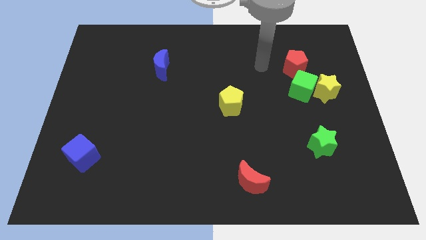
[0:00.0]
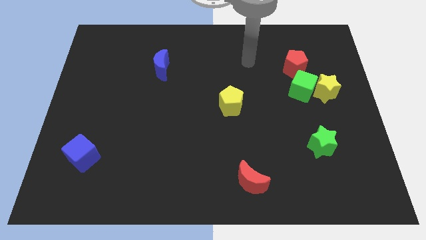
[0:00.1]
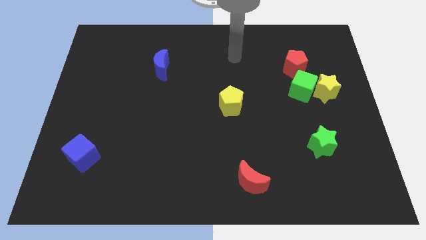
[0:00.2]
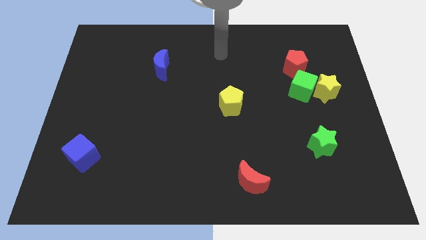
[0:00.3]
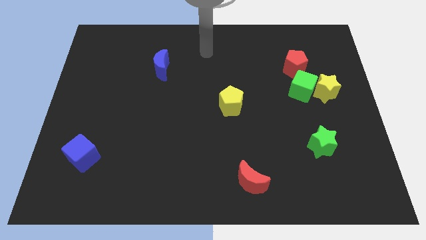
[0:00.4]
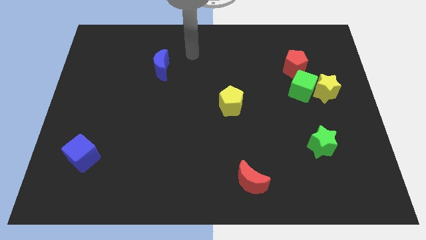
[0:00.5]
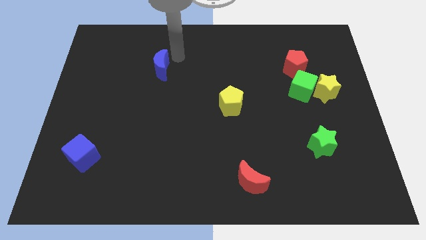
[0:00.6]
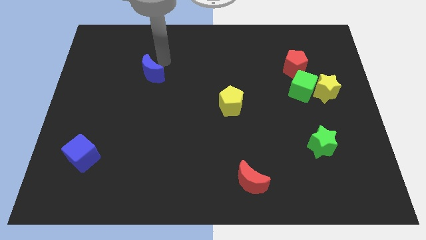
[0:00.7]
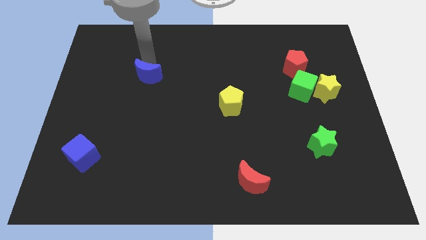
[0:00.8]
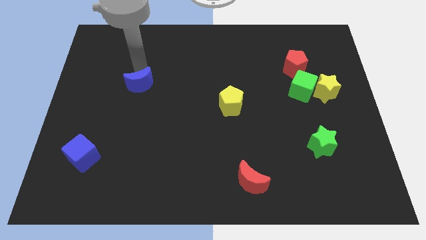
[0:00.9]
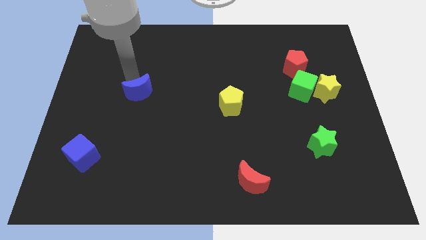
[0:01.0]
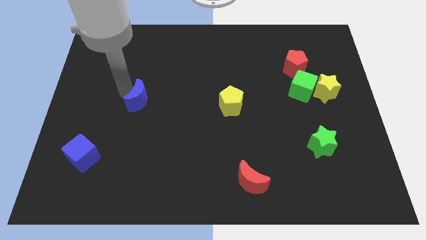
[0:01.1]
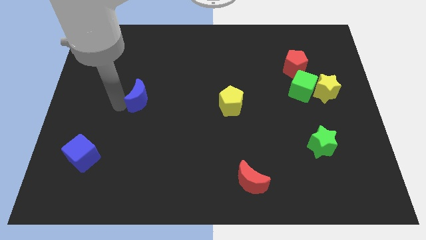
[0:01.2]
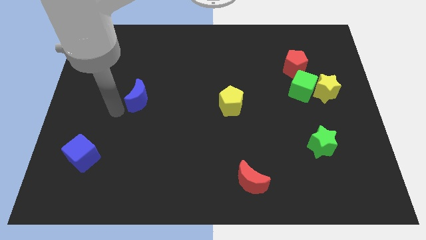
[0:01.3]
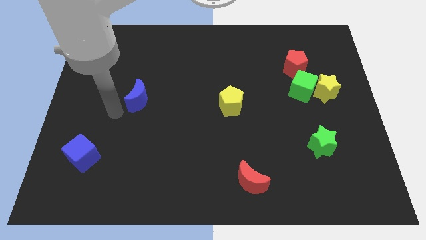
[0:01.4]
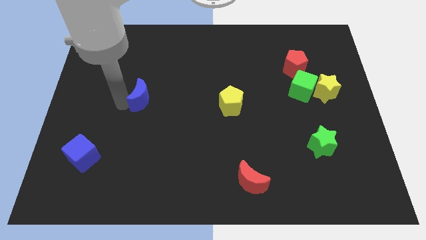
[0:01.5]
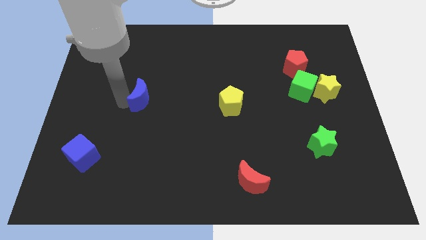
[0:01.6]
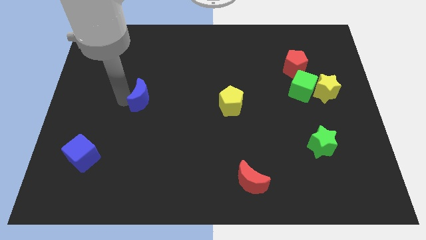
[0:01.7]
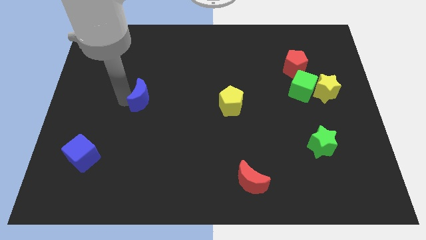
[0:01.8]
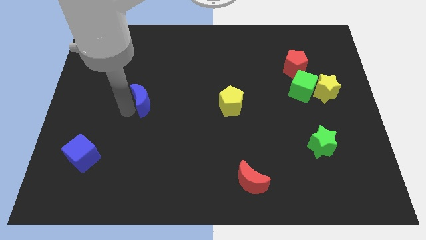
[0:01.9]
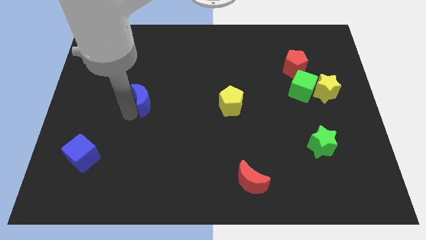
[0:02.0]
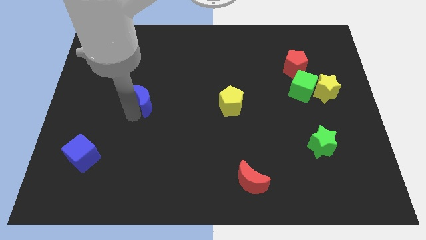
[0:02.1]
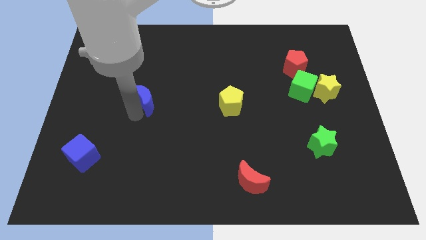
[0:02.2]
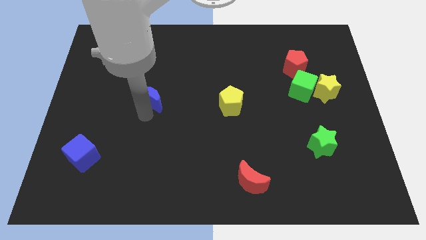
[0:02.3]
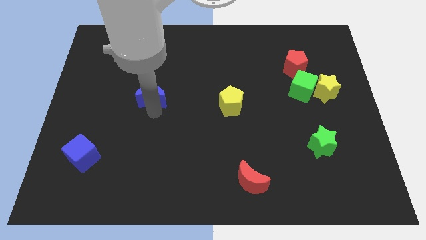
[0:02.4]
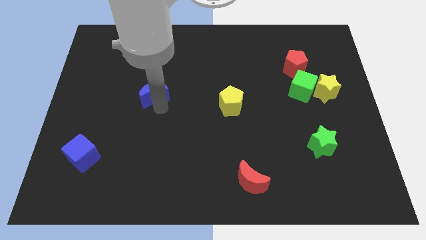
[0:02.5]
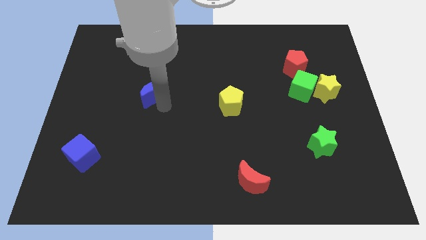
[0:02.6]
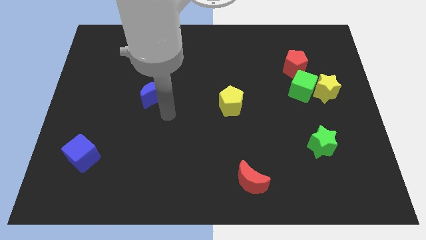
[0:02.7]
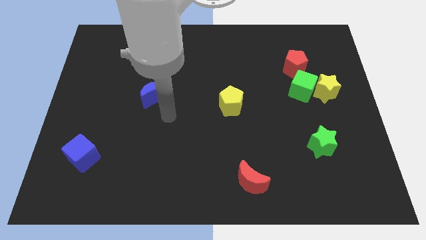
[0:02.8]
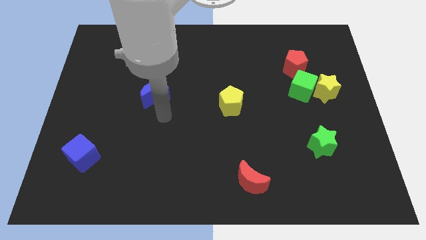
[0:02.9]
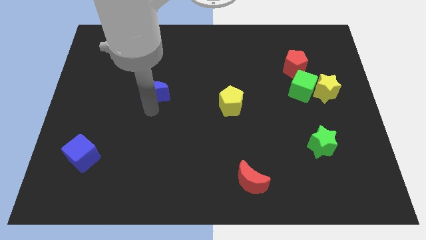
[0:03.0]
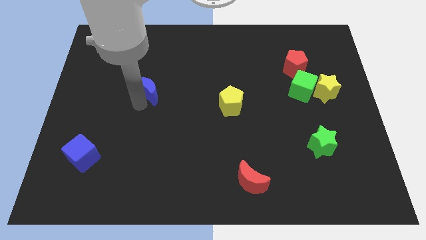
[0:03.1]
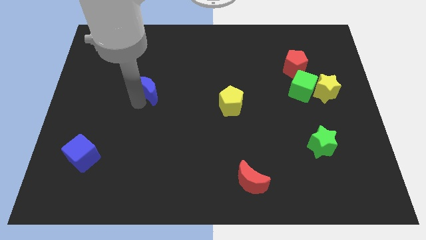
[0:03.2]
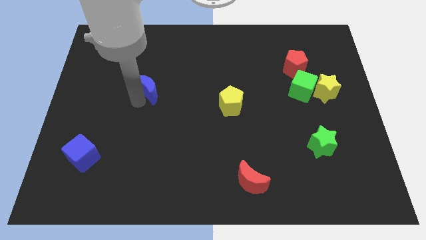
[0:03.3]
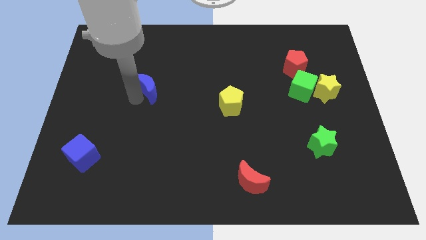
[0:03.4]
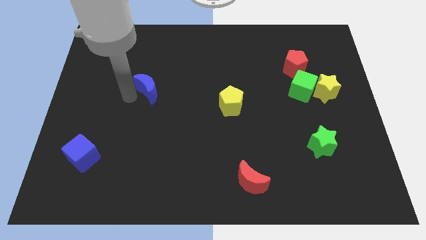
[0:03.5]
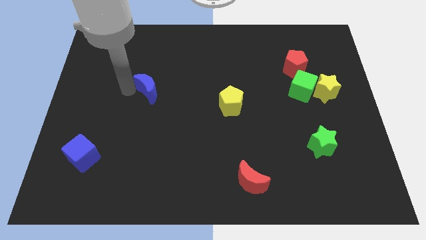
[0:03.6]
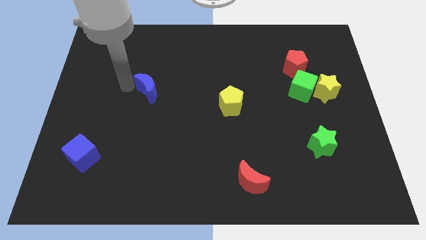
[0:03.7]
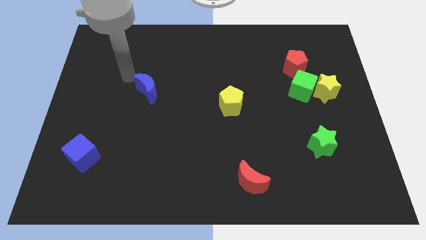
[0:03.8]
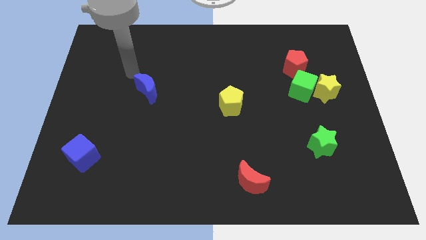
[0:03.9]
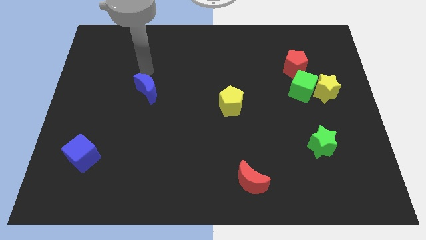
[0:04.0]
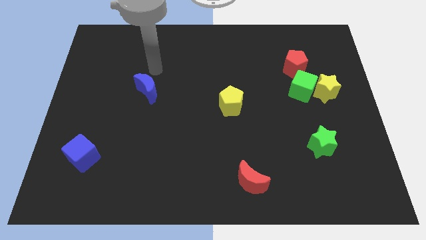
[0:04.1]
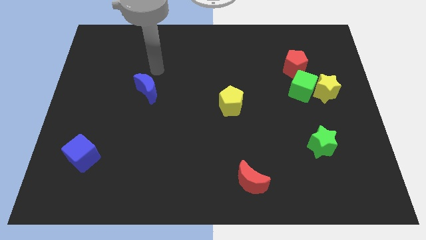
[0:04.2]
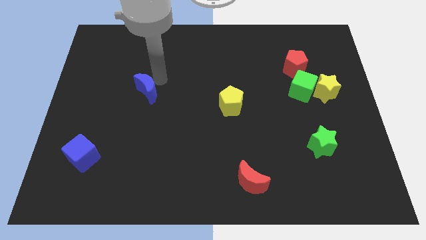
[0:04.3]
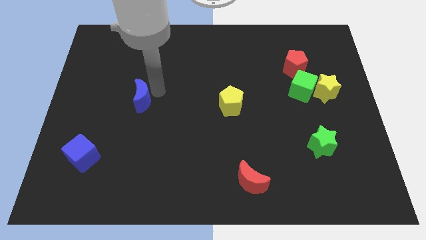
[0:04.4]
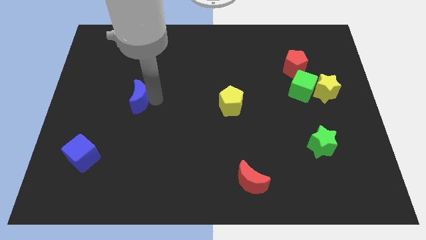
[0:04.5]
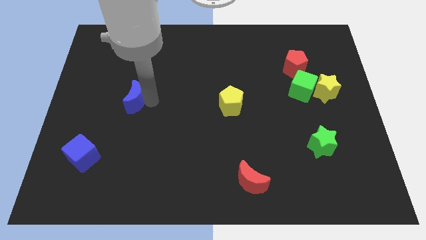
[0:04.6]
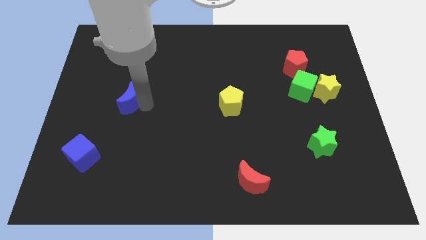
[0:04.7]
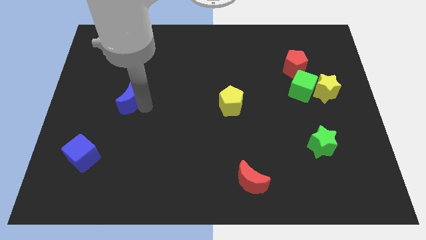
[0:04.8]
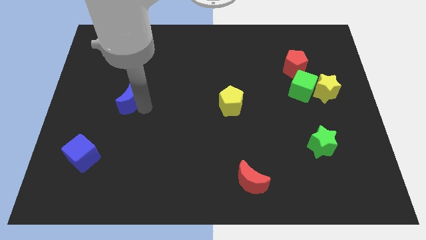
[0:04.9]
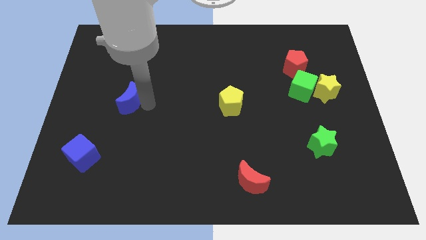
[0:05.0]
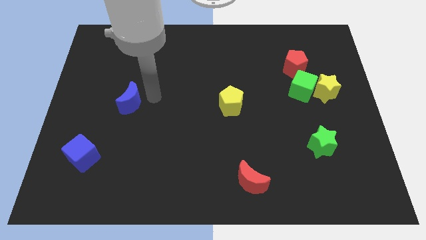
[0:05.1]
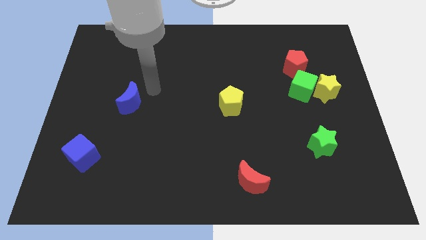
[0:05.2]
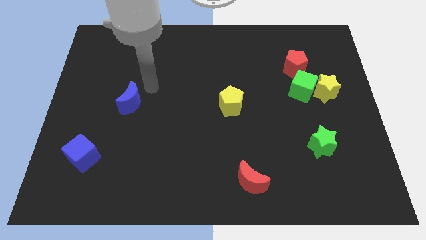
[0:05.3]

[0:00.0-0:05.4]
move the blue moon slightly back and forth

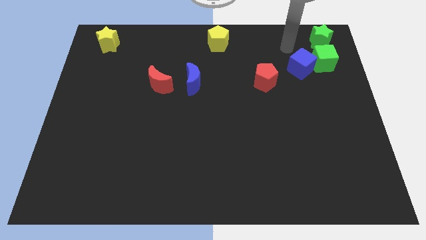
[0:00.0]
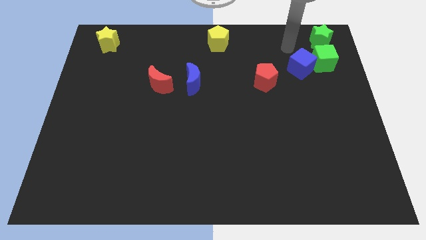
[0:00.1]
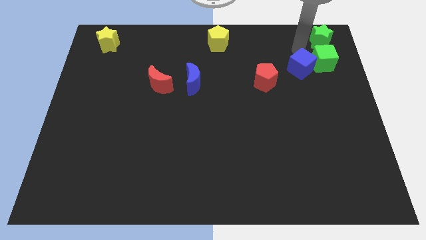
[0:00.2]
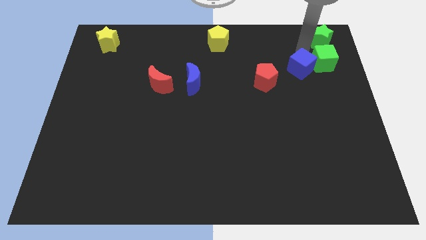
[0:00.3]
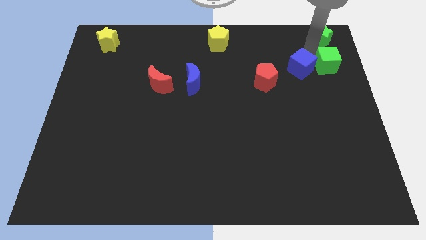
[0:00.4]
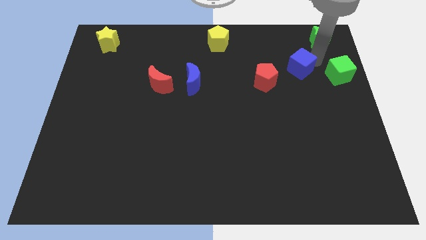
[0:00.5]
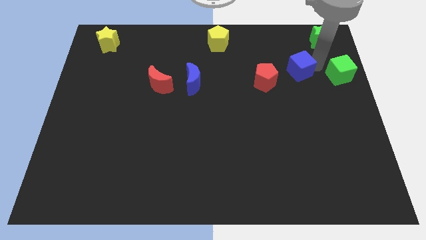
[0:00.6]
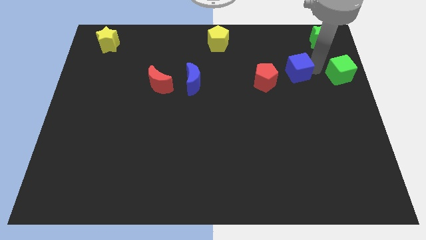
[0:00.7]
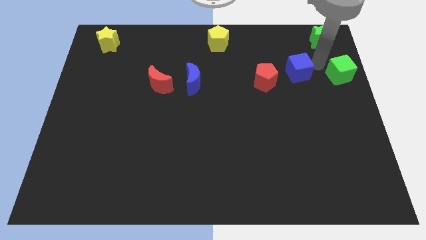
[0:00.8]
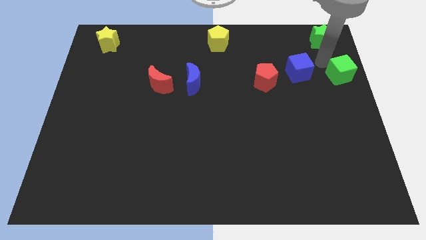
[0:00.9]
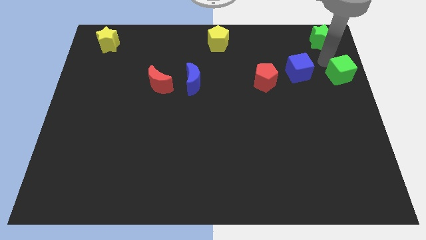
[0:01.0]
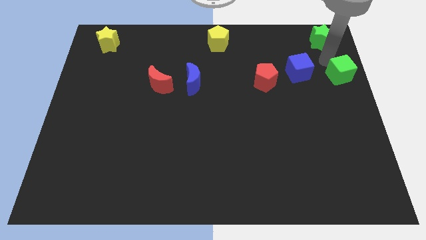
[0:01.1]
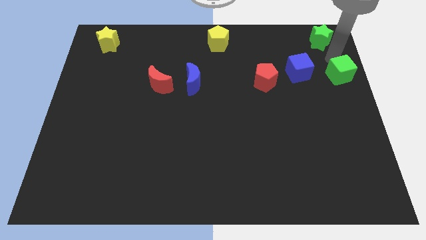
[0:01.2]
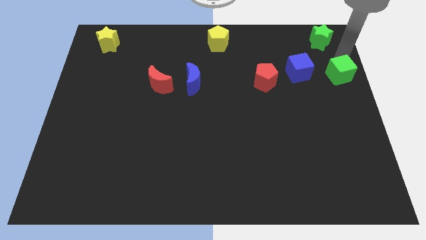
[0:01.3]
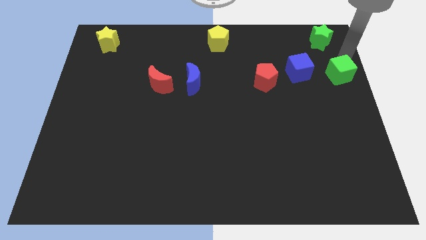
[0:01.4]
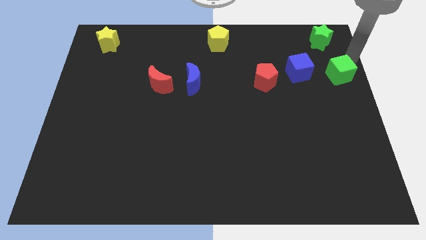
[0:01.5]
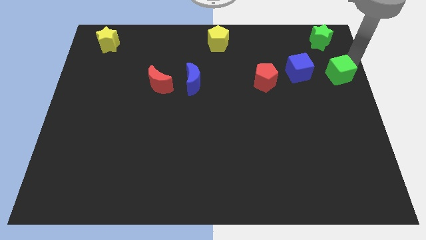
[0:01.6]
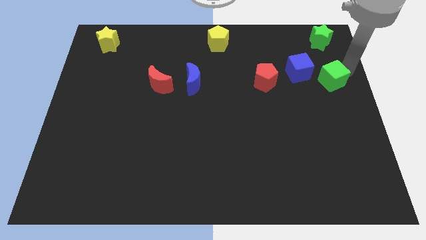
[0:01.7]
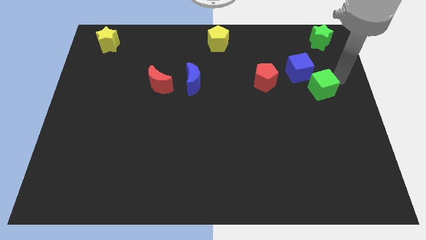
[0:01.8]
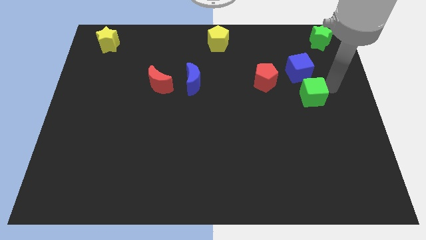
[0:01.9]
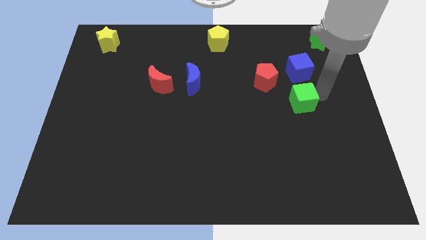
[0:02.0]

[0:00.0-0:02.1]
separate the green cube from the blue cube

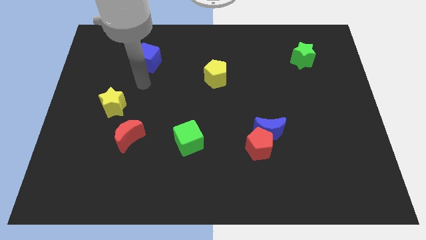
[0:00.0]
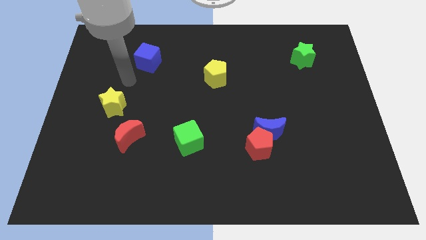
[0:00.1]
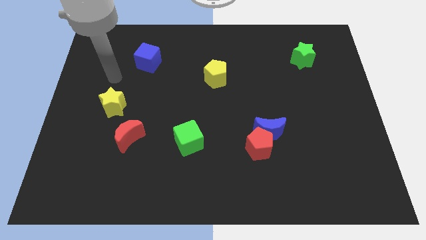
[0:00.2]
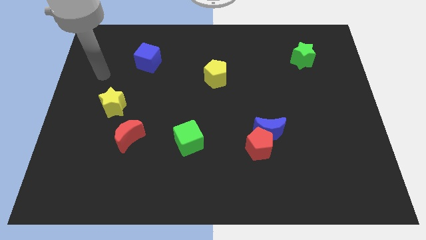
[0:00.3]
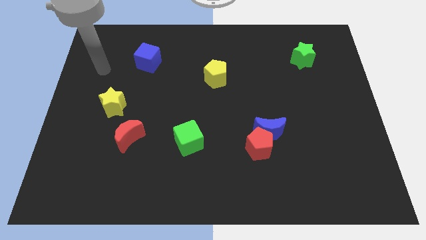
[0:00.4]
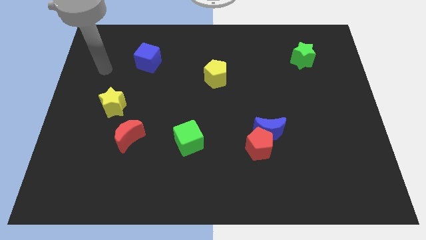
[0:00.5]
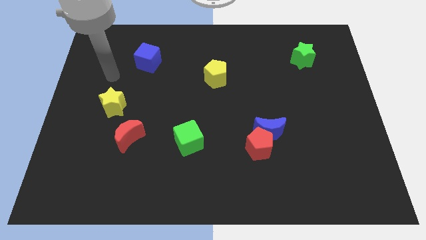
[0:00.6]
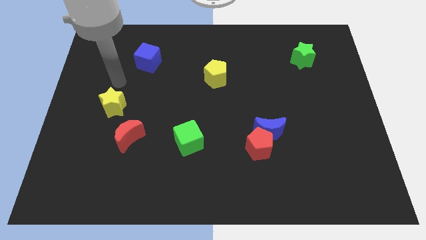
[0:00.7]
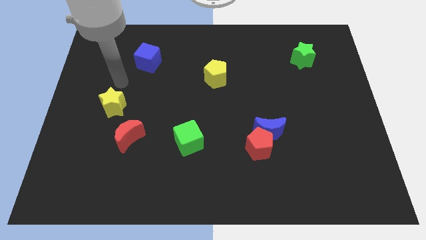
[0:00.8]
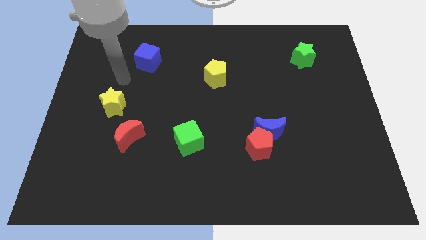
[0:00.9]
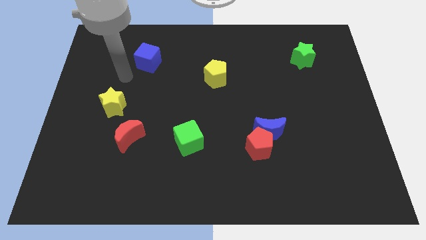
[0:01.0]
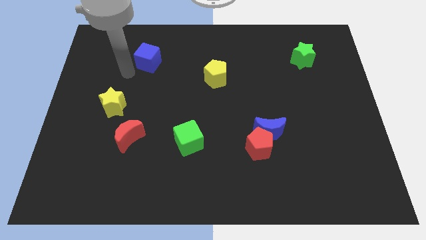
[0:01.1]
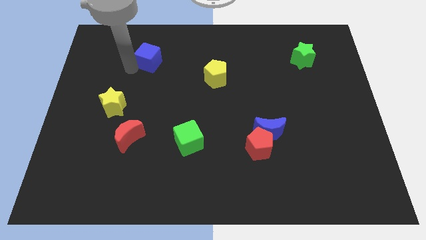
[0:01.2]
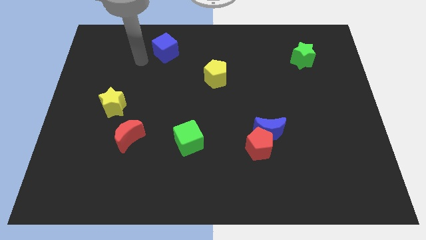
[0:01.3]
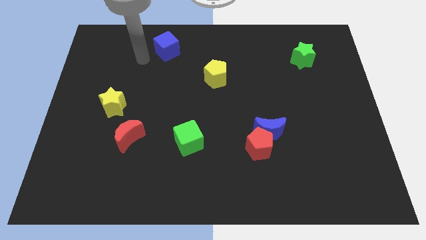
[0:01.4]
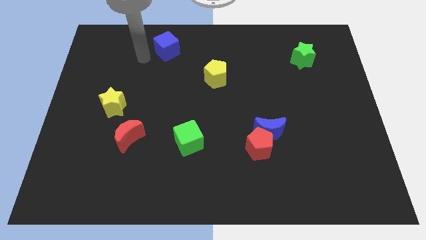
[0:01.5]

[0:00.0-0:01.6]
hit the blue cube with the arm
